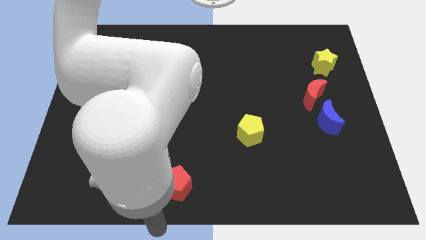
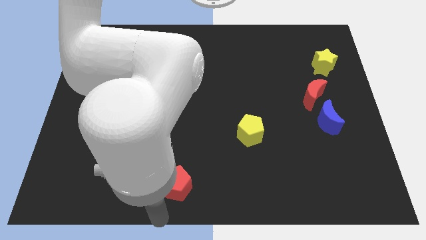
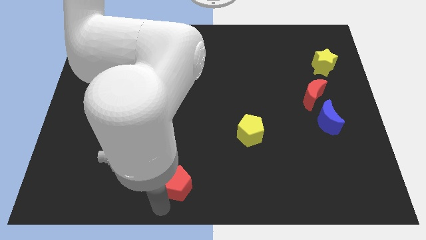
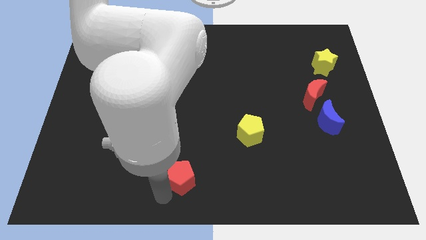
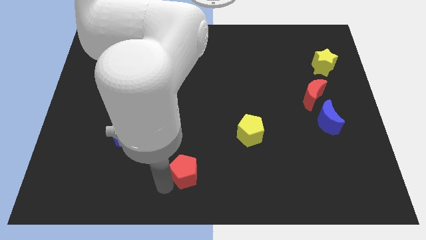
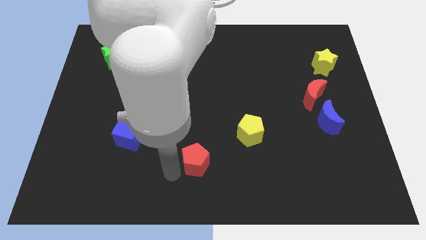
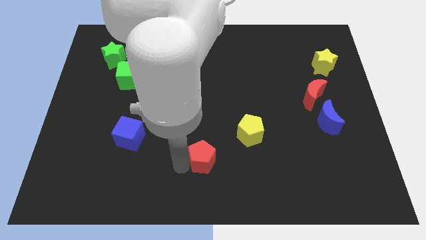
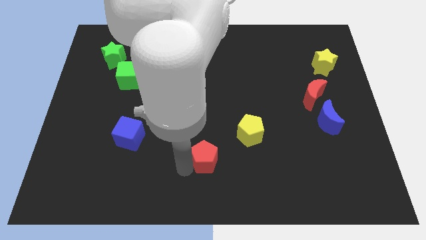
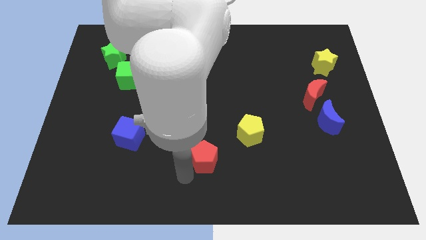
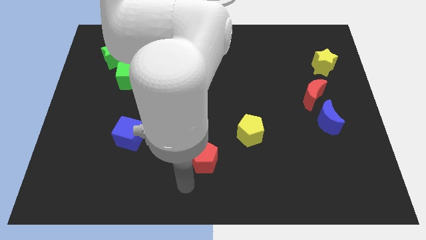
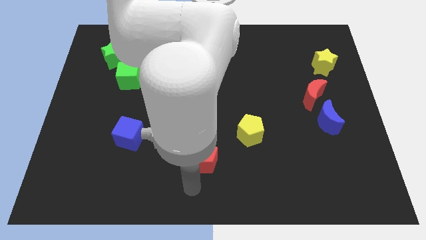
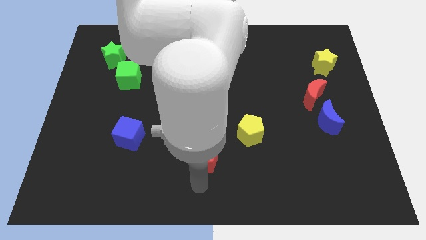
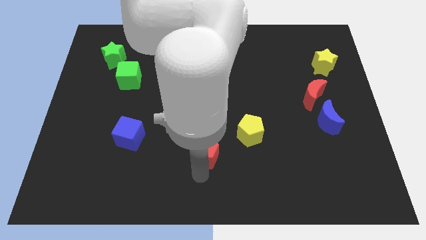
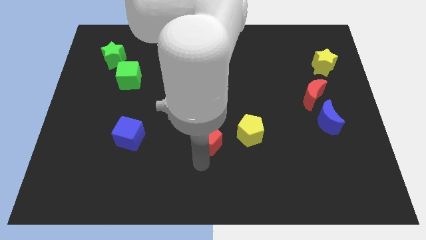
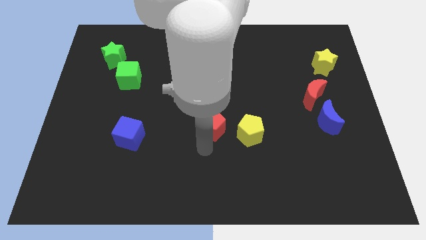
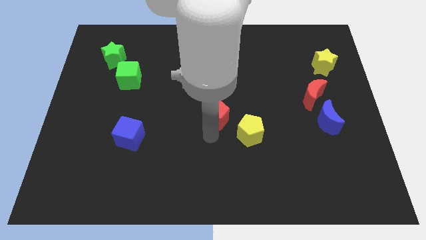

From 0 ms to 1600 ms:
drag the red pentagon slightly towards the top of the board

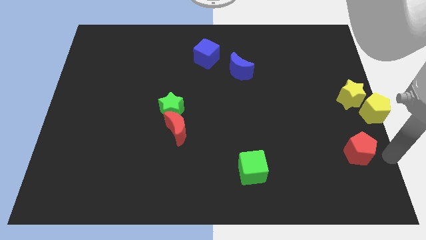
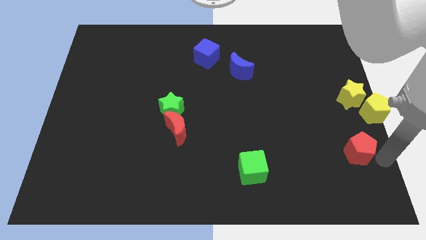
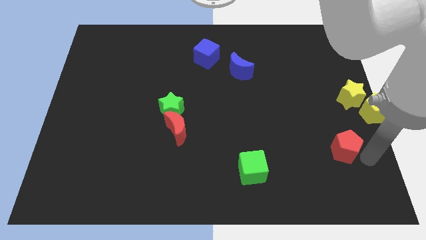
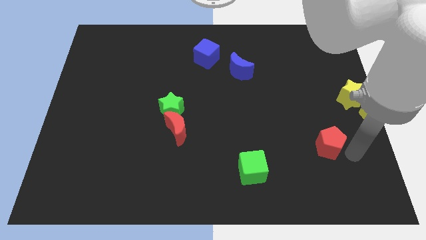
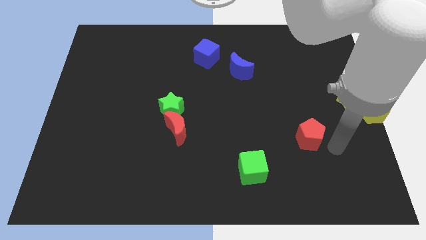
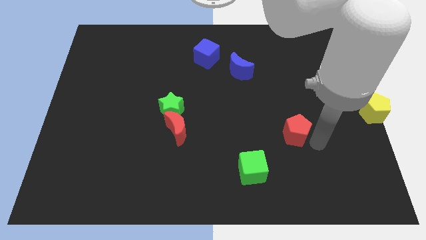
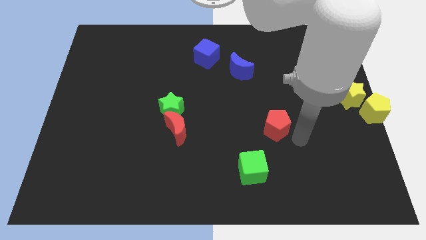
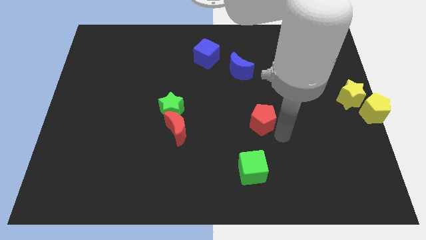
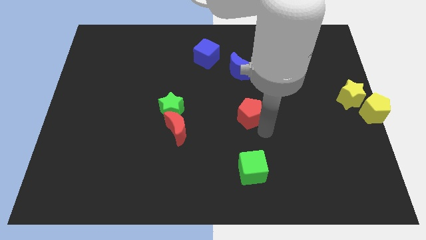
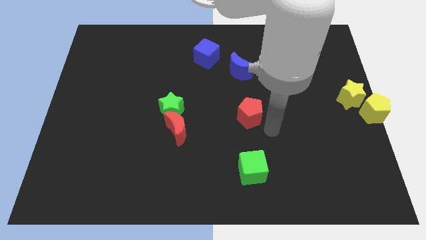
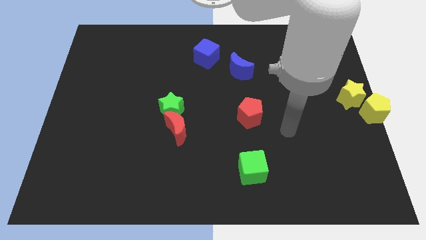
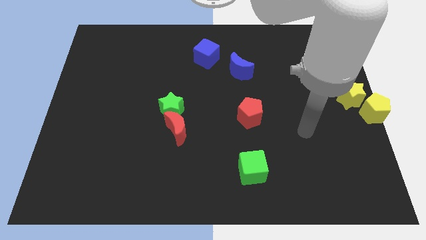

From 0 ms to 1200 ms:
move the red pentagon to top side of the green cube

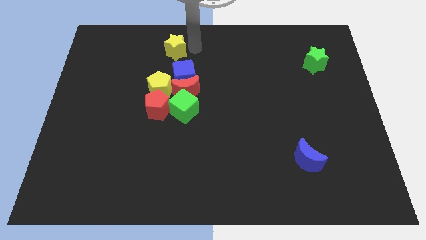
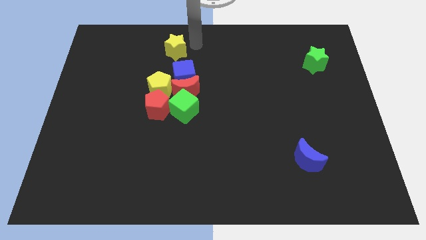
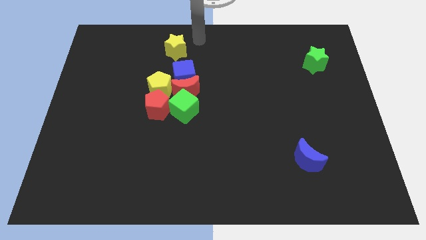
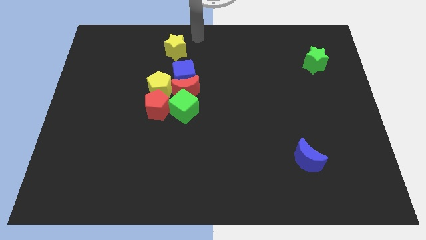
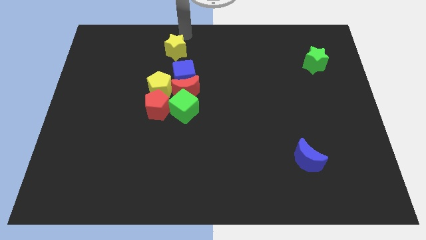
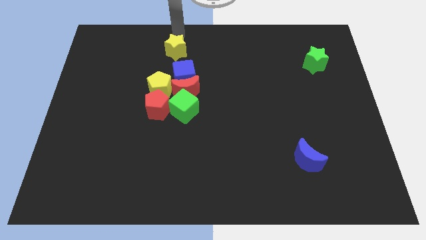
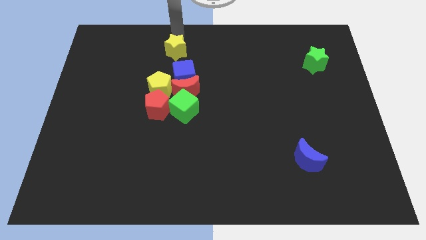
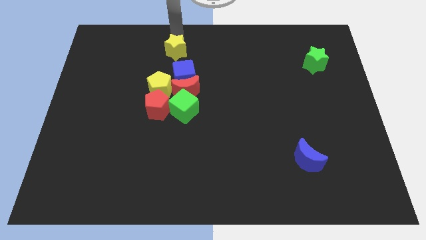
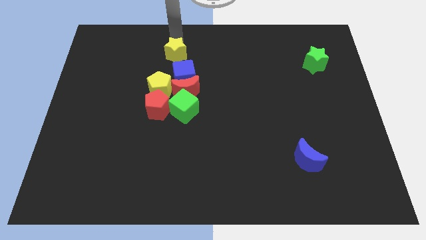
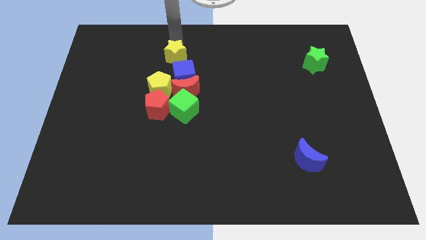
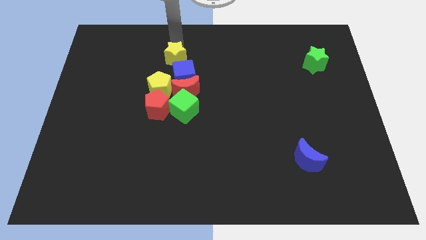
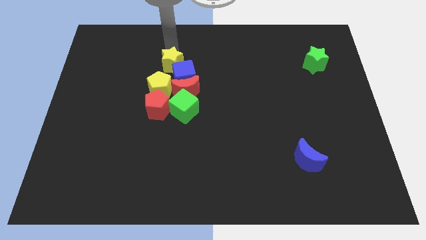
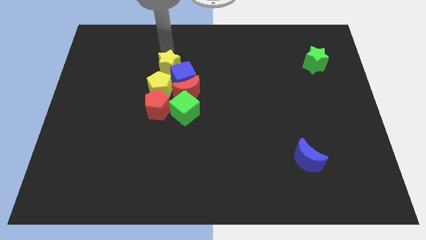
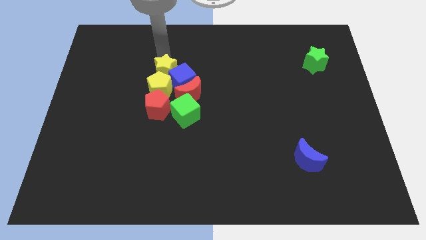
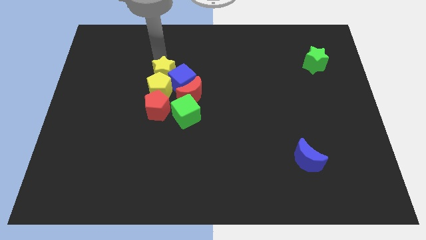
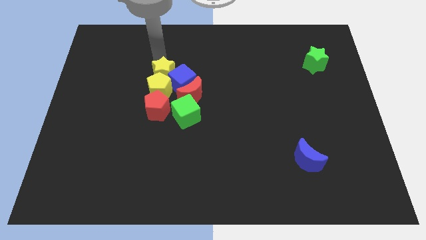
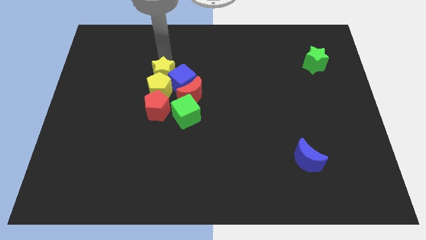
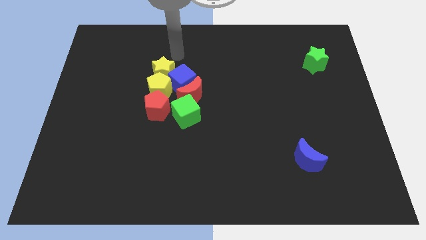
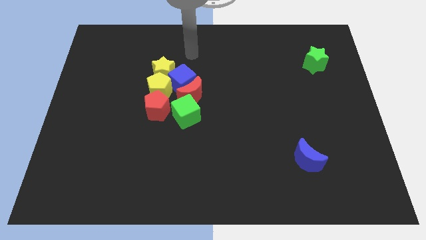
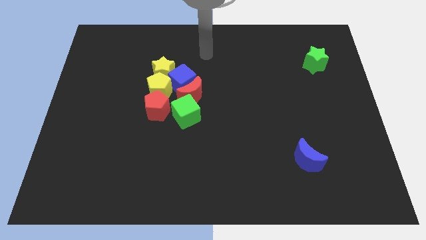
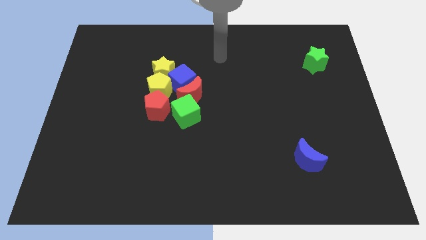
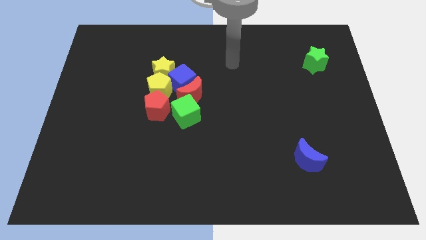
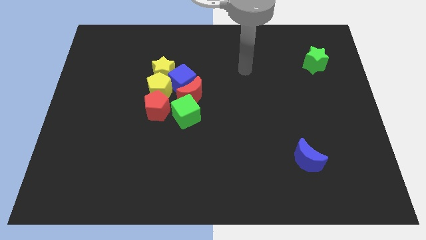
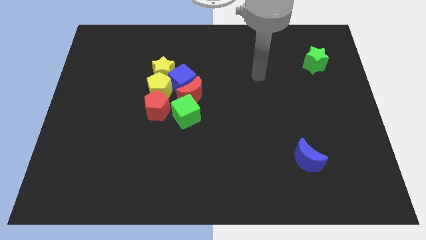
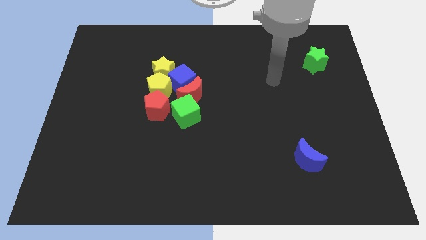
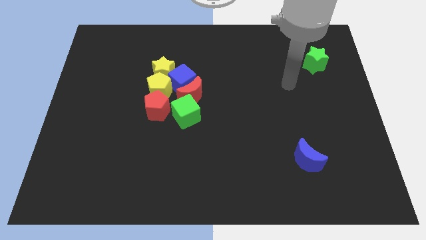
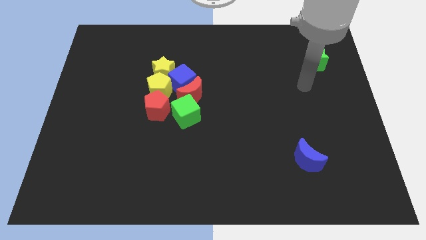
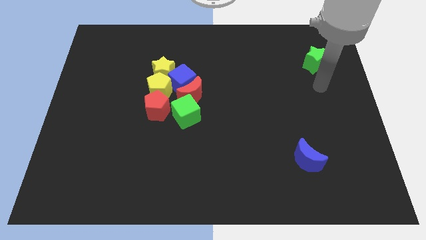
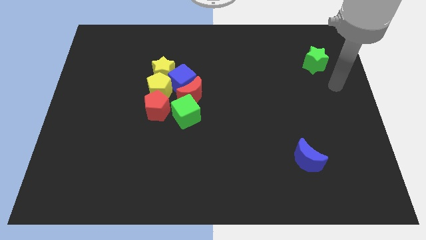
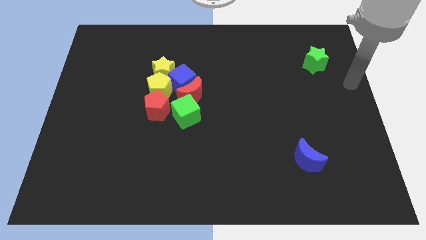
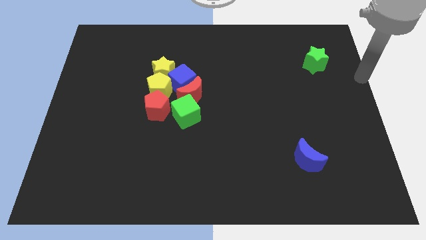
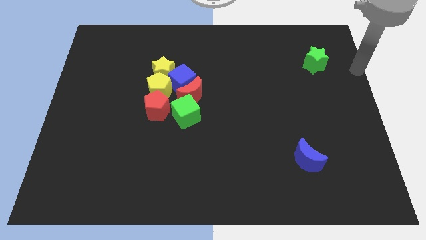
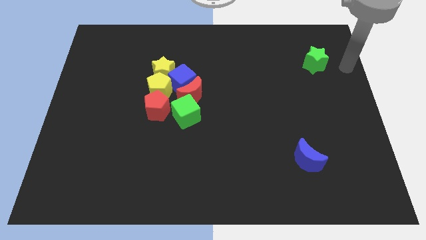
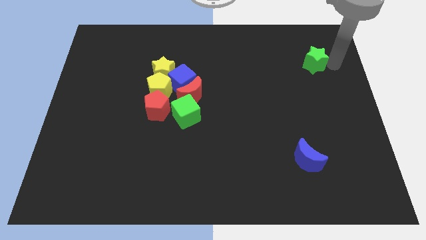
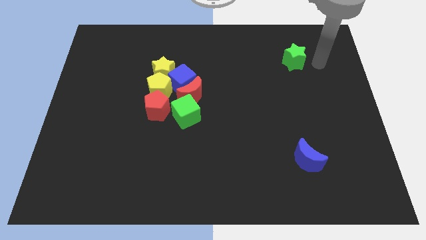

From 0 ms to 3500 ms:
push the yellow star into the yellow pentagon

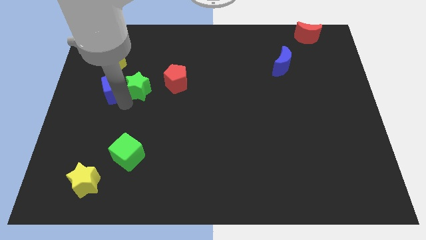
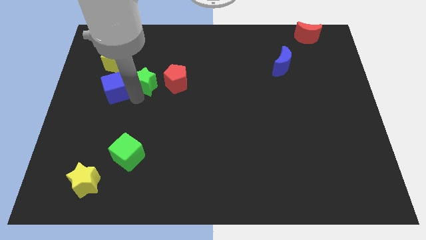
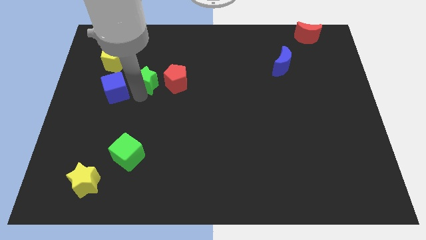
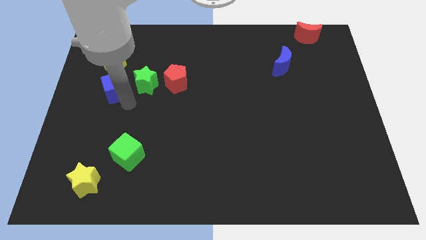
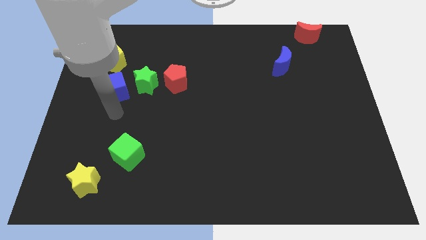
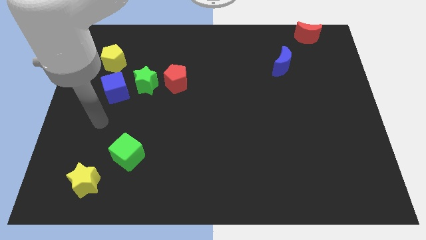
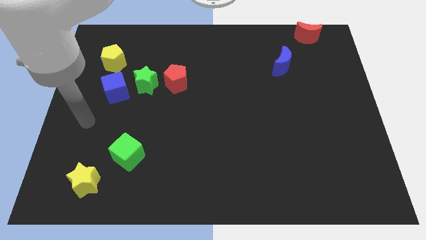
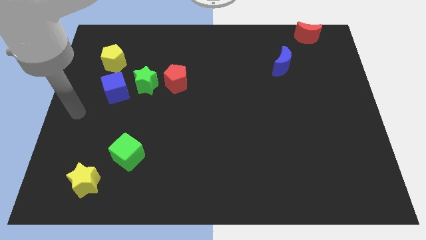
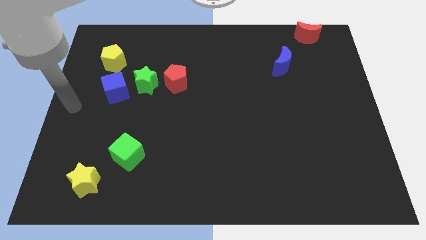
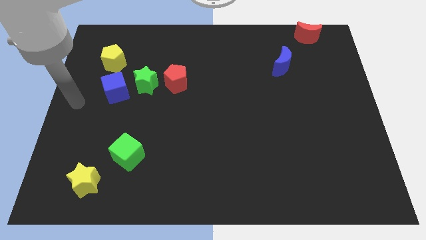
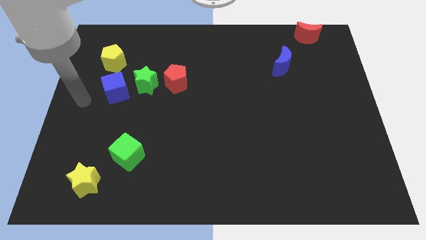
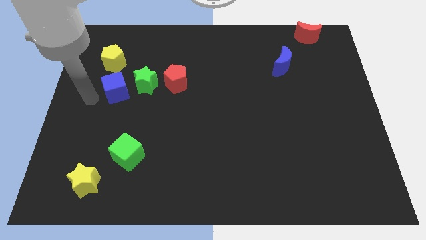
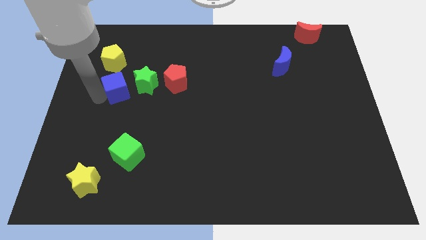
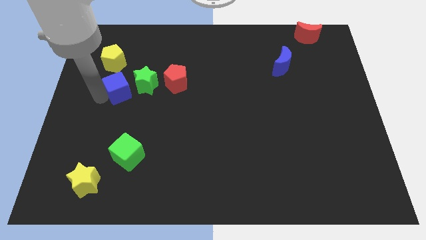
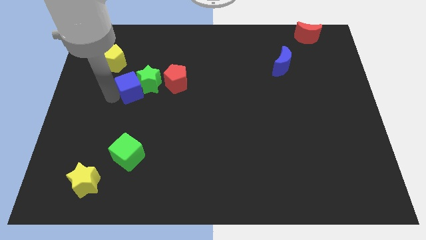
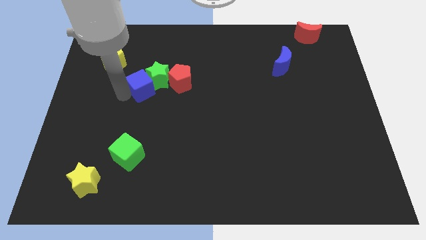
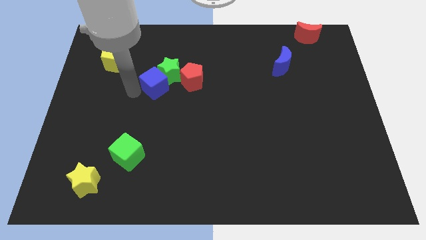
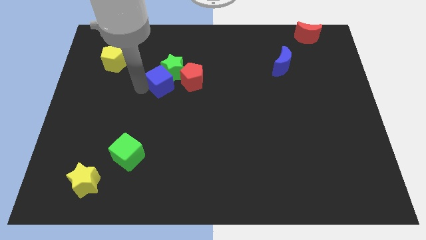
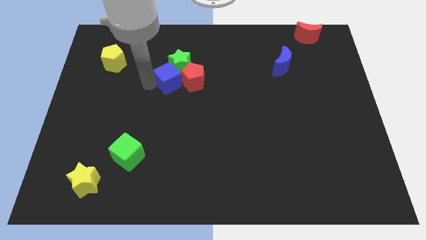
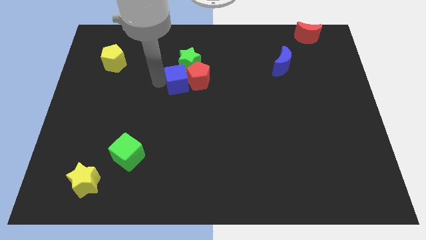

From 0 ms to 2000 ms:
push the blue cube to the left side of the red pentagon

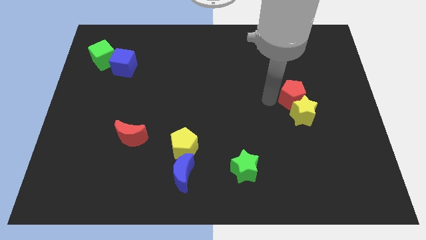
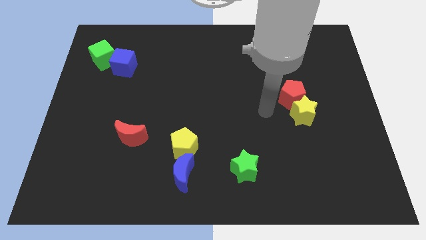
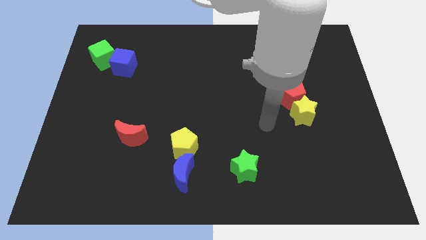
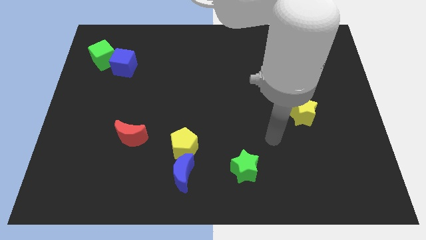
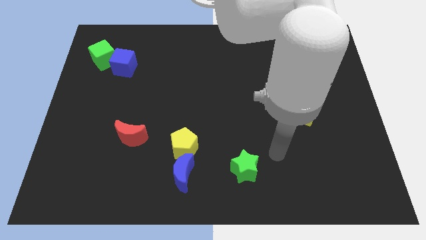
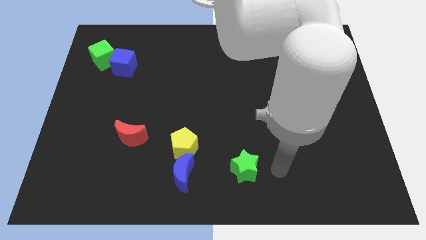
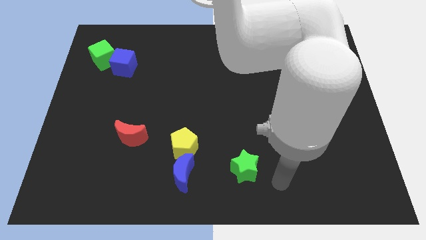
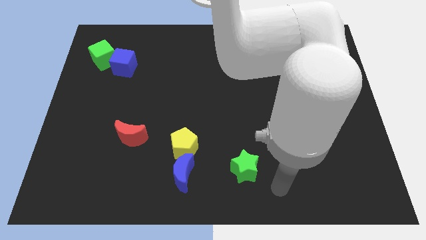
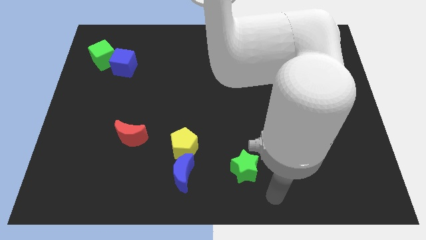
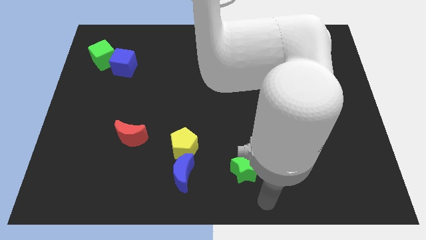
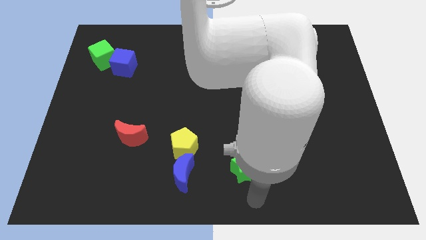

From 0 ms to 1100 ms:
move your arm away from red pentagon
